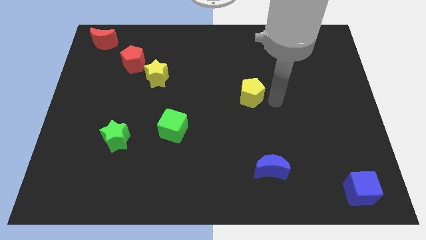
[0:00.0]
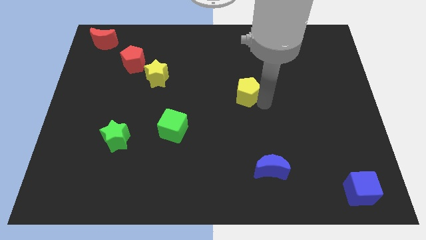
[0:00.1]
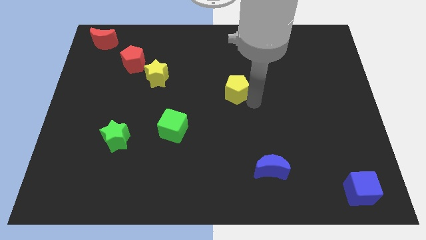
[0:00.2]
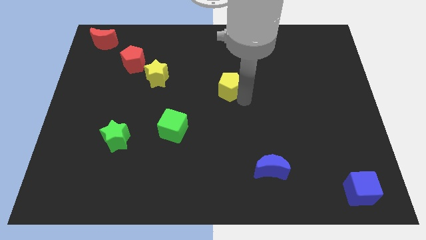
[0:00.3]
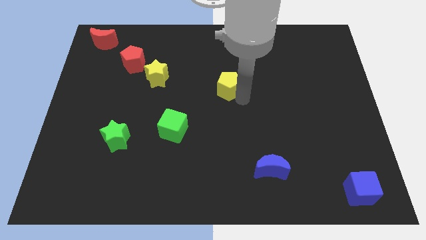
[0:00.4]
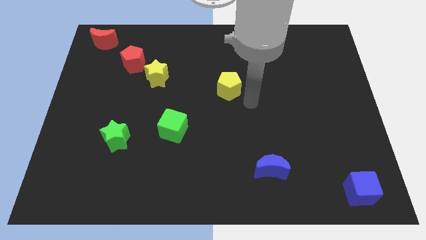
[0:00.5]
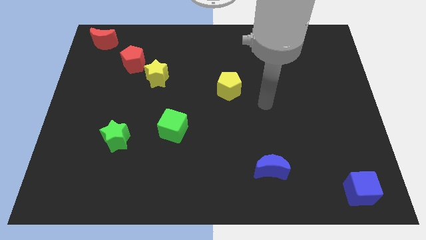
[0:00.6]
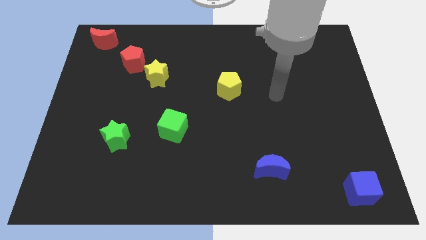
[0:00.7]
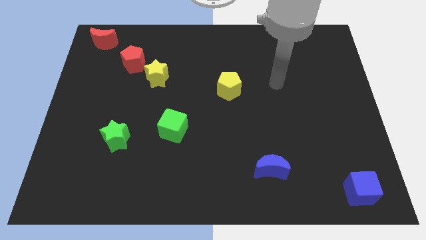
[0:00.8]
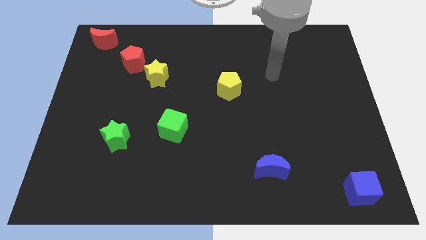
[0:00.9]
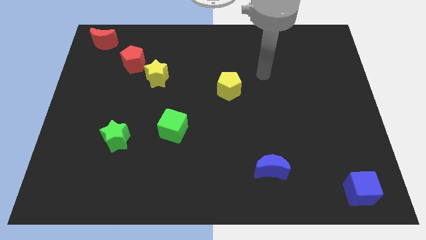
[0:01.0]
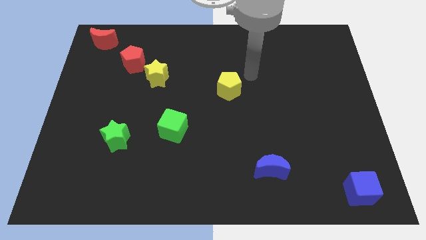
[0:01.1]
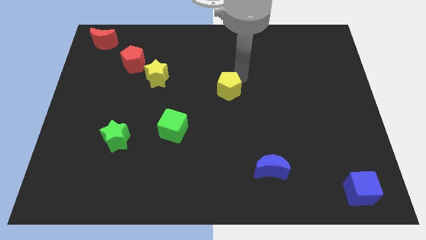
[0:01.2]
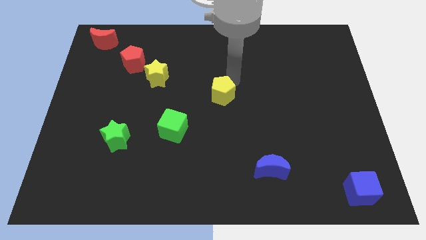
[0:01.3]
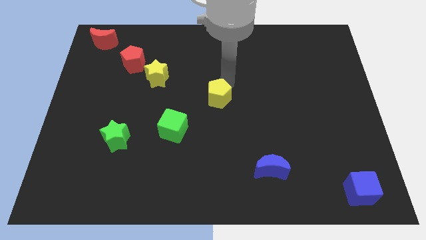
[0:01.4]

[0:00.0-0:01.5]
move the yellow pentagon to the center of the board

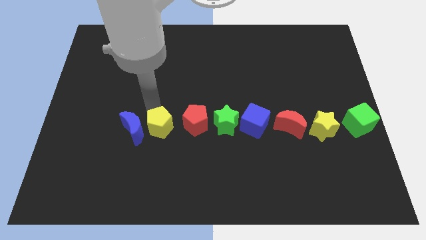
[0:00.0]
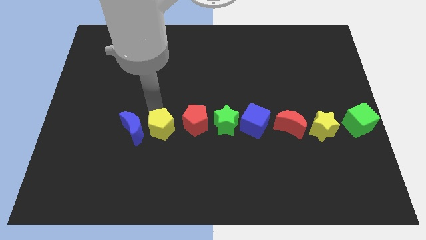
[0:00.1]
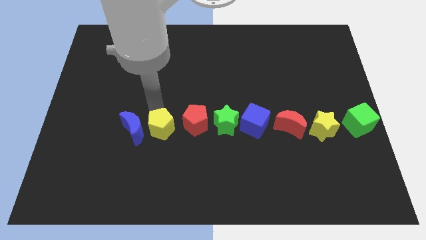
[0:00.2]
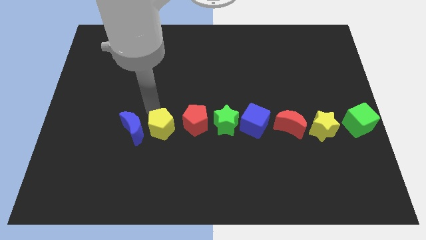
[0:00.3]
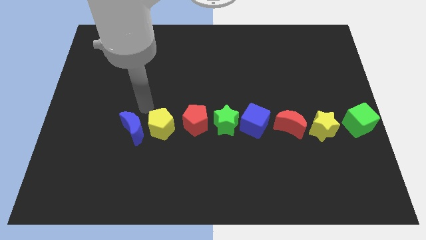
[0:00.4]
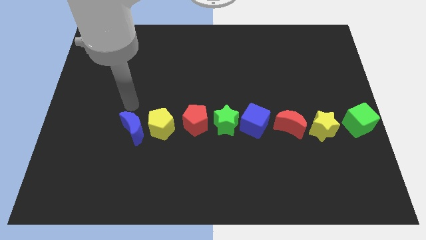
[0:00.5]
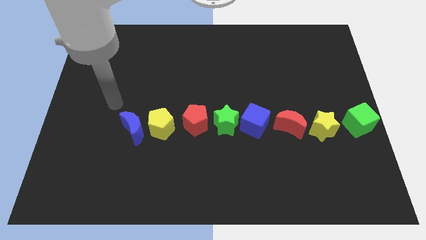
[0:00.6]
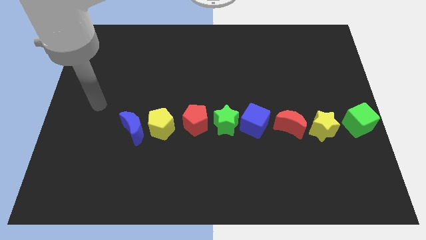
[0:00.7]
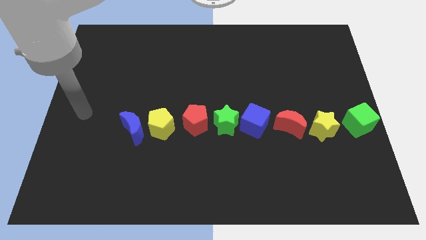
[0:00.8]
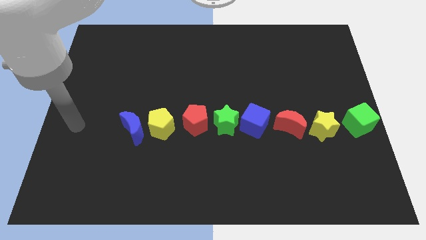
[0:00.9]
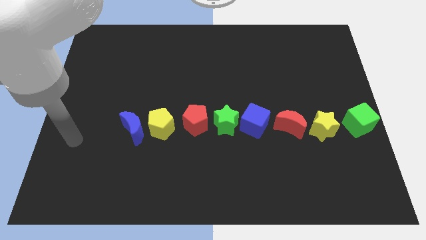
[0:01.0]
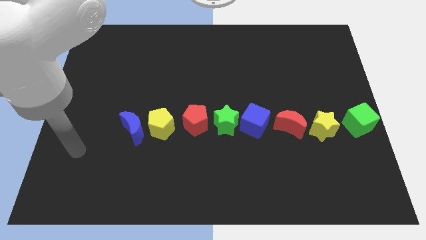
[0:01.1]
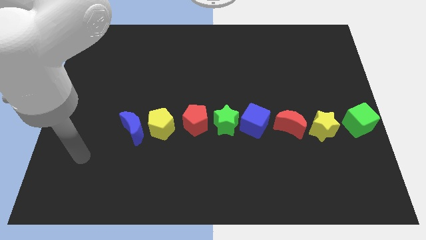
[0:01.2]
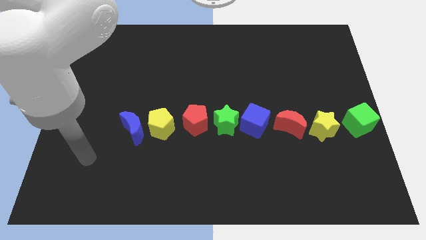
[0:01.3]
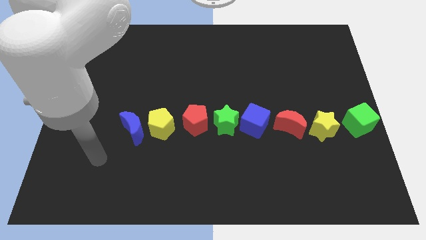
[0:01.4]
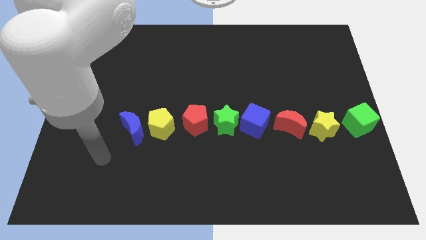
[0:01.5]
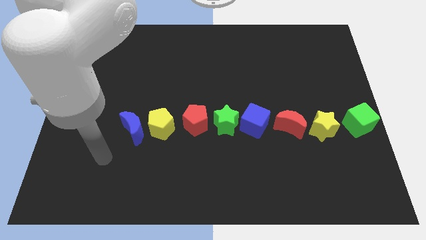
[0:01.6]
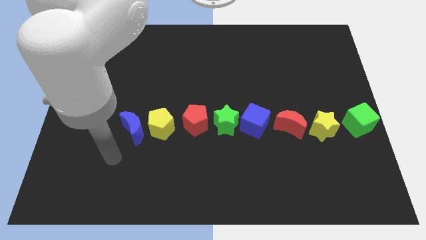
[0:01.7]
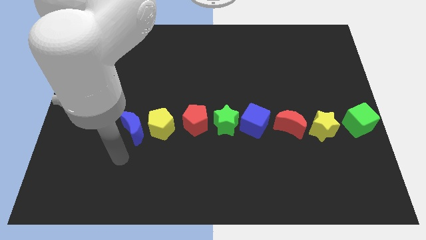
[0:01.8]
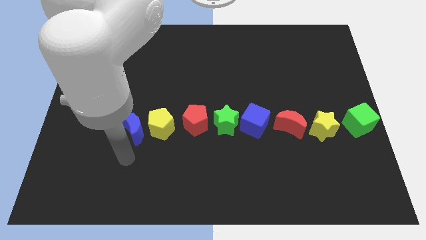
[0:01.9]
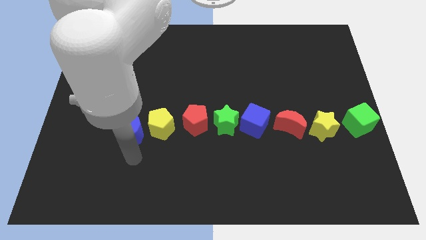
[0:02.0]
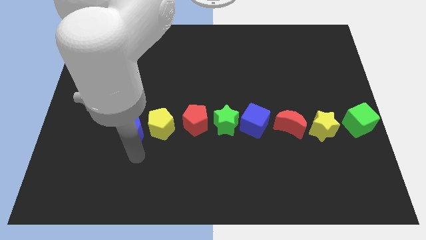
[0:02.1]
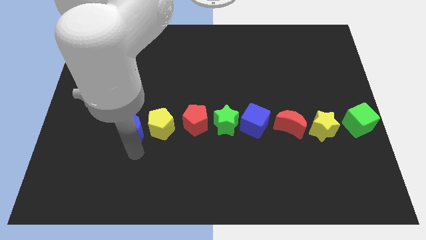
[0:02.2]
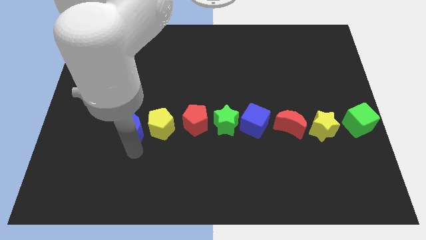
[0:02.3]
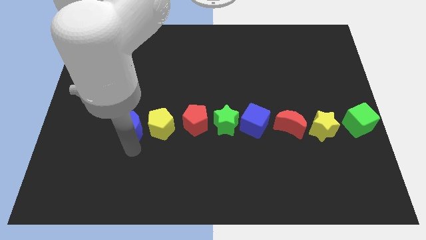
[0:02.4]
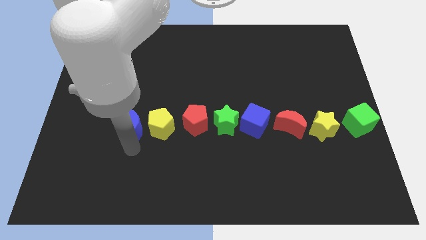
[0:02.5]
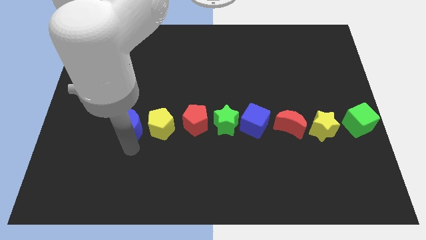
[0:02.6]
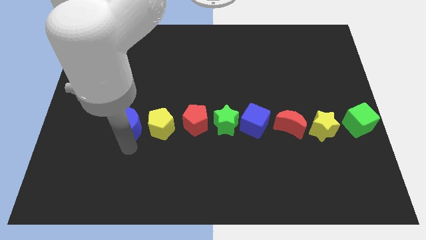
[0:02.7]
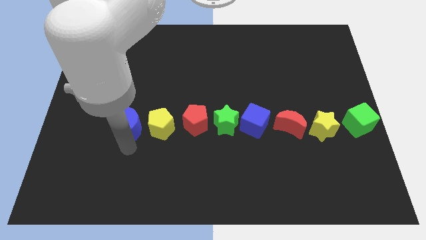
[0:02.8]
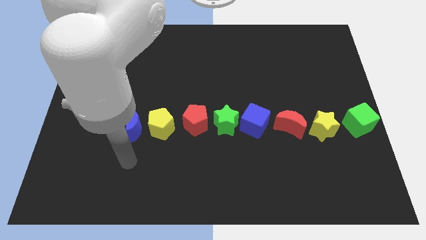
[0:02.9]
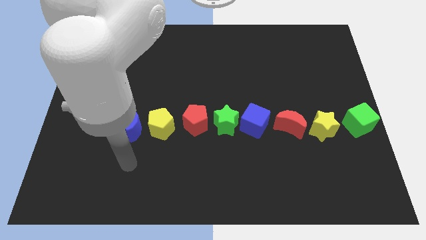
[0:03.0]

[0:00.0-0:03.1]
push the blue moon upwards slightly

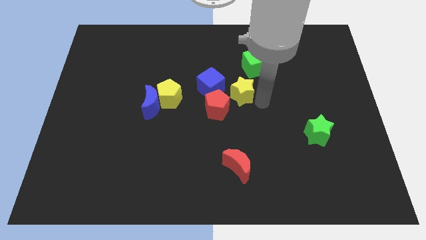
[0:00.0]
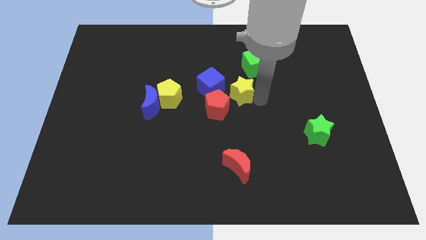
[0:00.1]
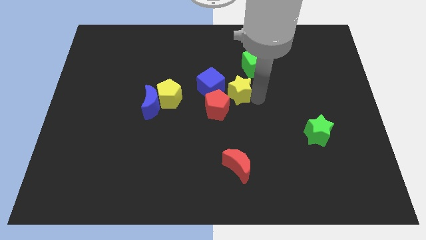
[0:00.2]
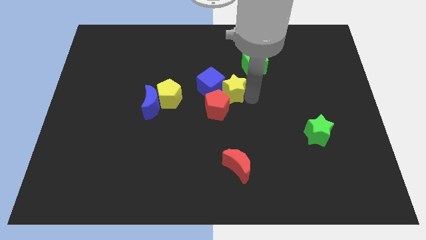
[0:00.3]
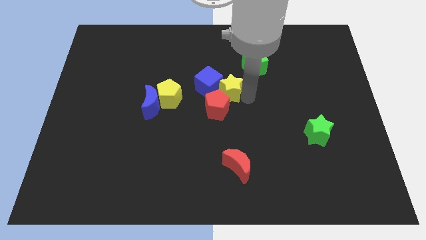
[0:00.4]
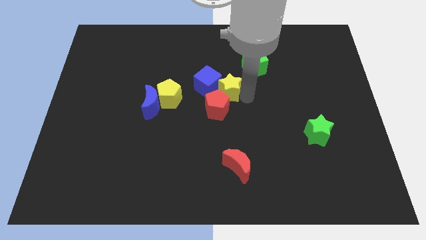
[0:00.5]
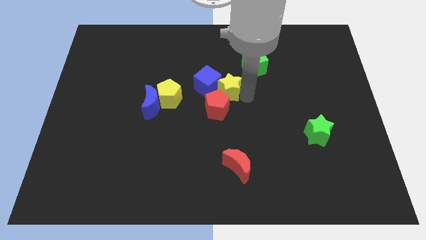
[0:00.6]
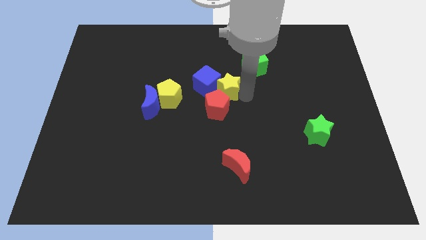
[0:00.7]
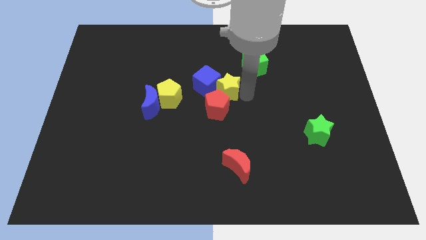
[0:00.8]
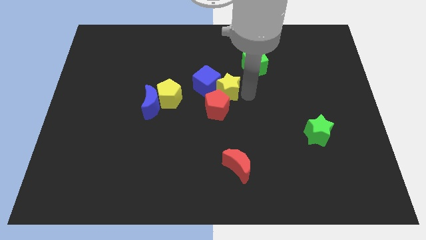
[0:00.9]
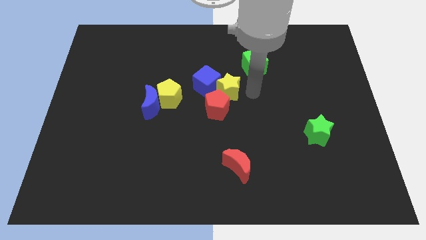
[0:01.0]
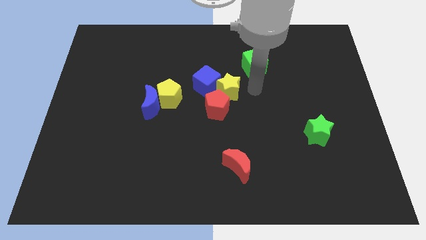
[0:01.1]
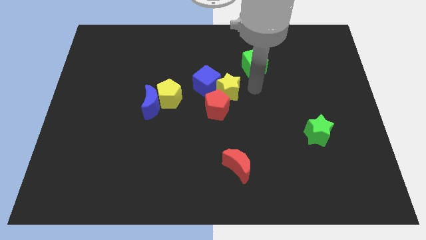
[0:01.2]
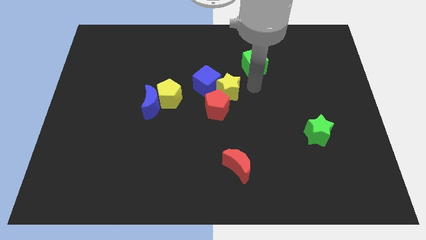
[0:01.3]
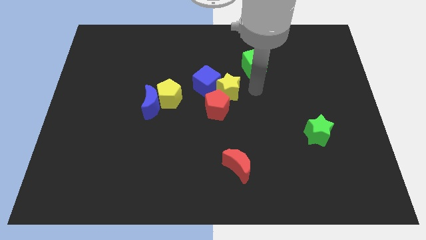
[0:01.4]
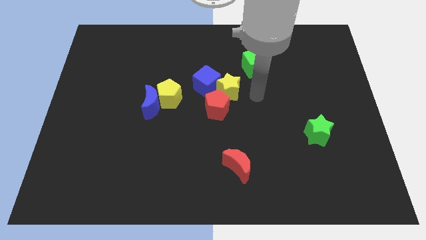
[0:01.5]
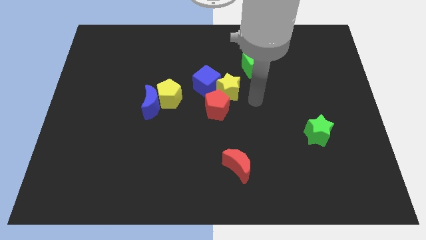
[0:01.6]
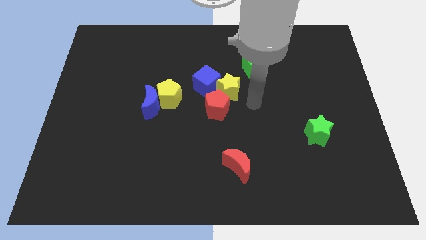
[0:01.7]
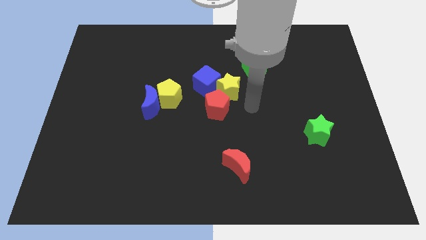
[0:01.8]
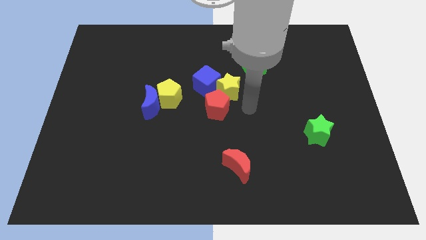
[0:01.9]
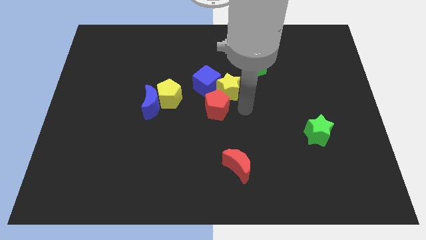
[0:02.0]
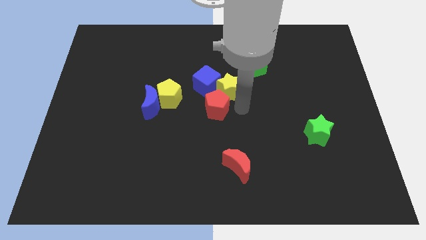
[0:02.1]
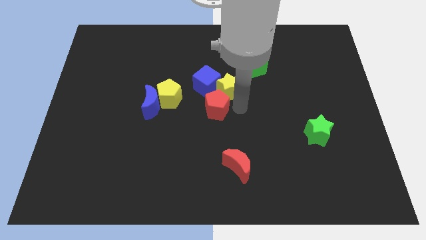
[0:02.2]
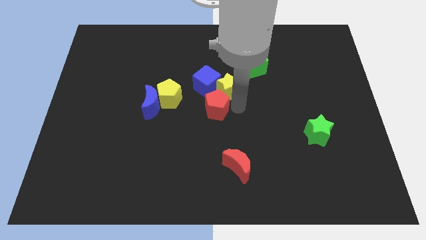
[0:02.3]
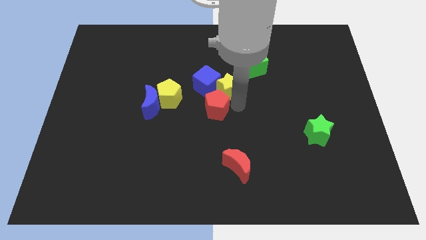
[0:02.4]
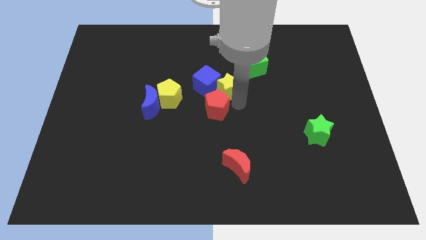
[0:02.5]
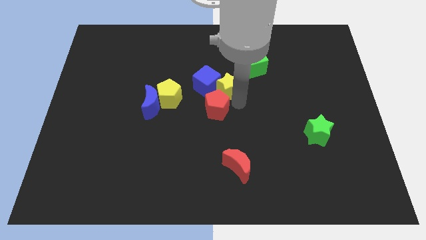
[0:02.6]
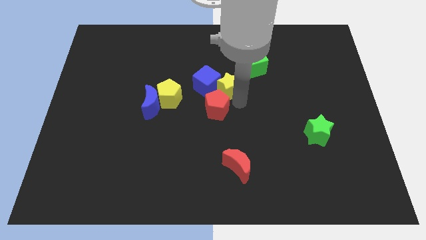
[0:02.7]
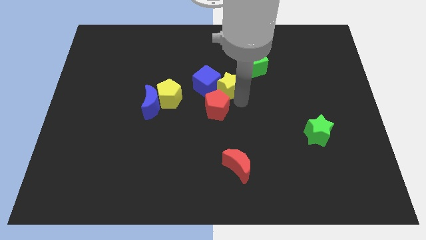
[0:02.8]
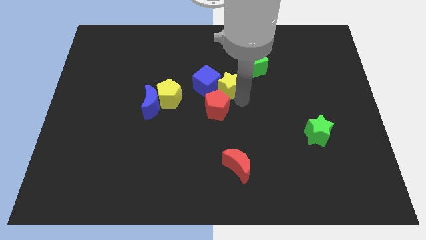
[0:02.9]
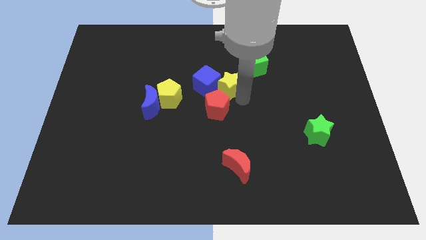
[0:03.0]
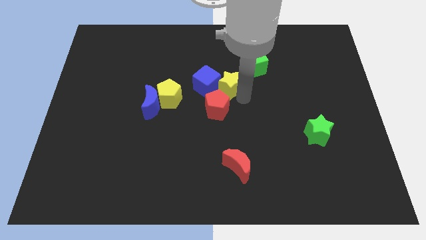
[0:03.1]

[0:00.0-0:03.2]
push yellow star close to blue block

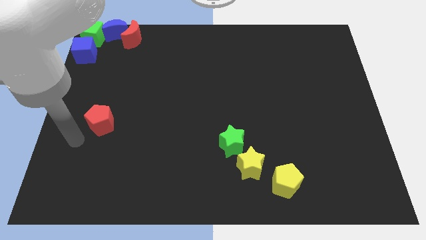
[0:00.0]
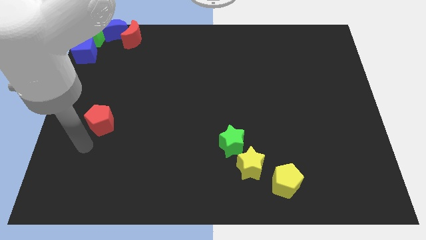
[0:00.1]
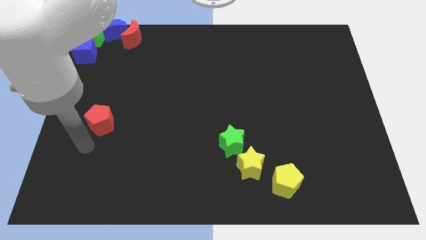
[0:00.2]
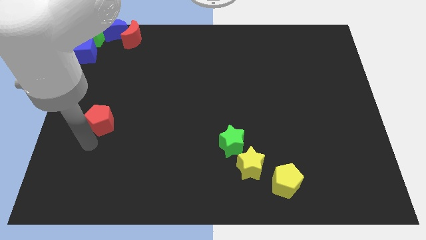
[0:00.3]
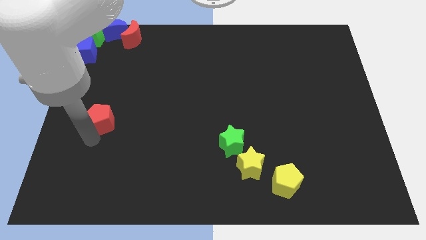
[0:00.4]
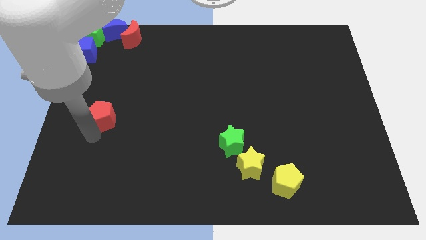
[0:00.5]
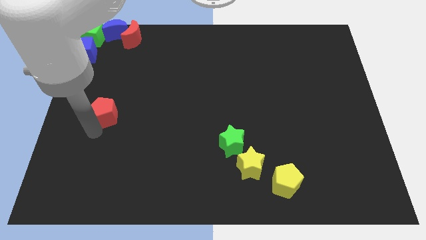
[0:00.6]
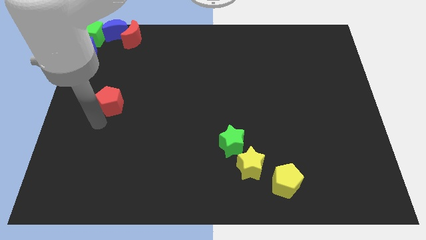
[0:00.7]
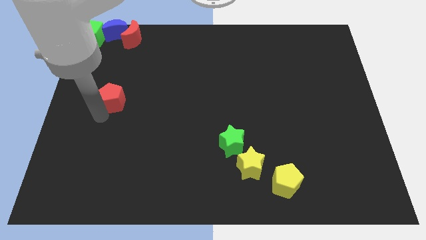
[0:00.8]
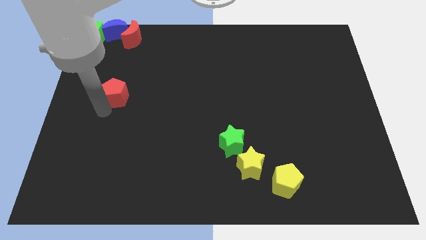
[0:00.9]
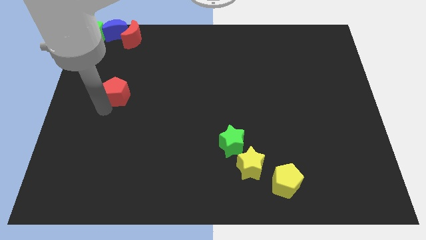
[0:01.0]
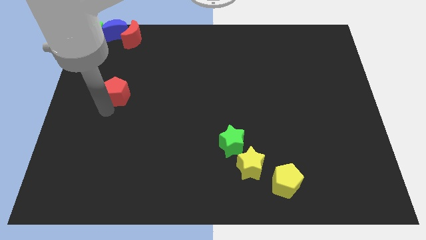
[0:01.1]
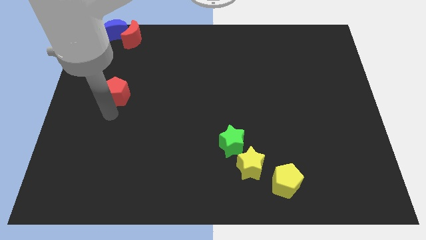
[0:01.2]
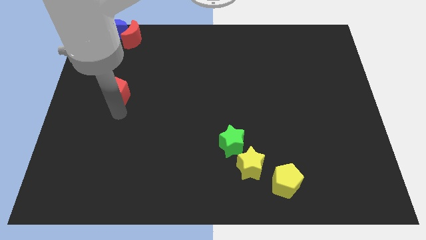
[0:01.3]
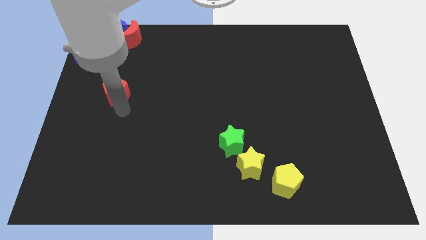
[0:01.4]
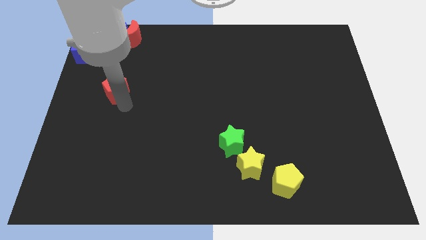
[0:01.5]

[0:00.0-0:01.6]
slide the red pentagon slightly up
